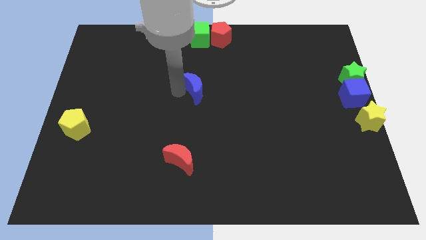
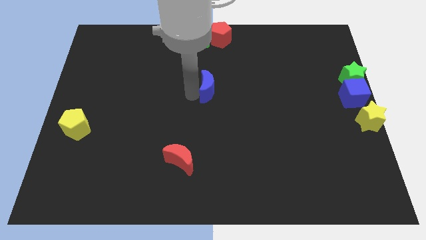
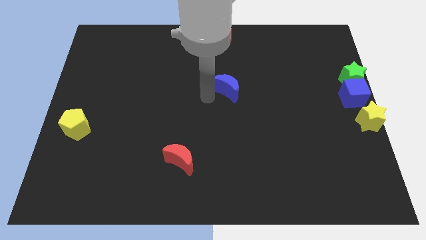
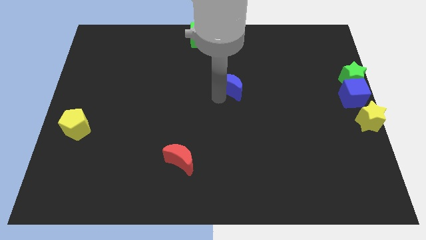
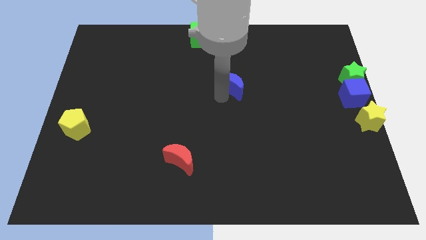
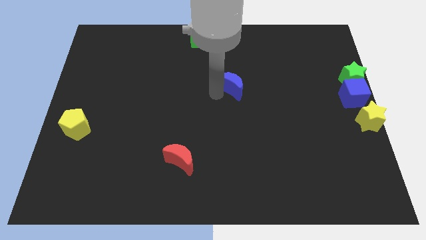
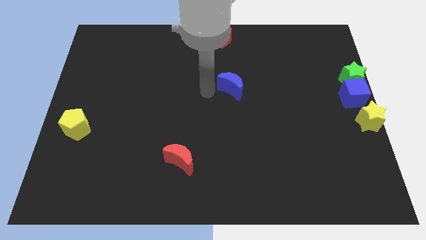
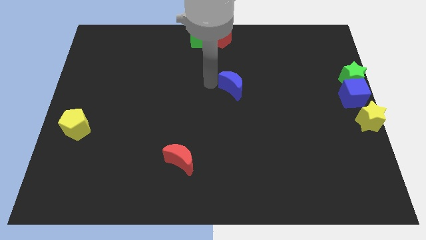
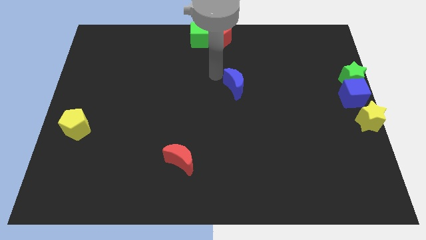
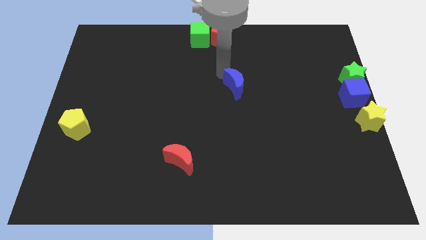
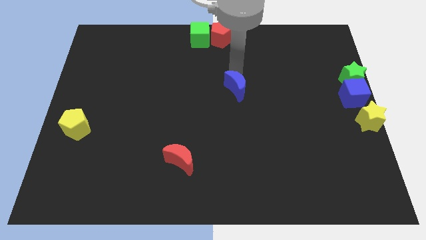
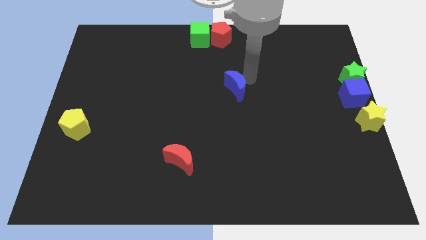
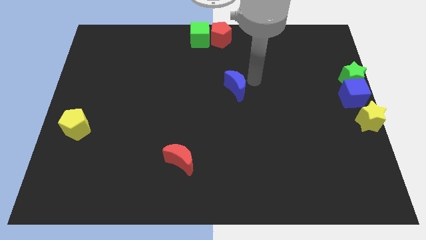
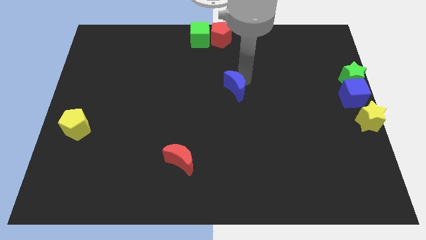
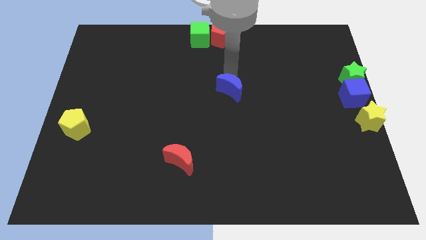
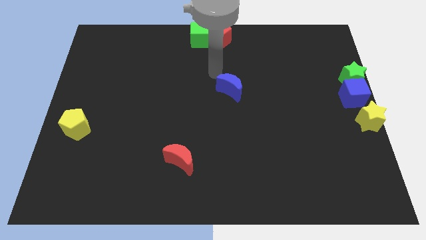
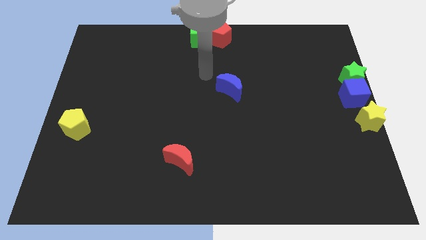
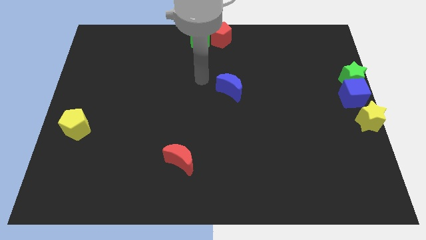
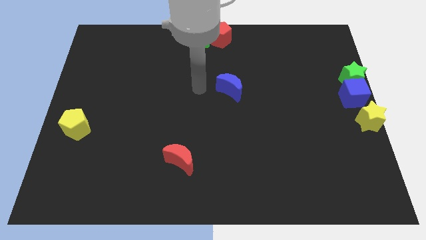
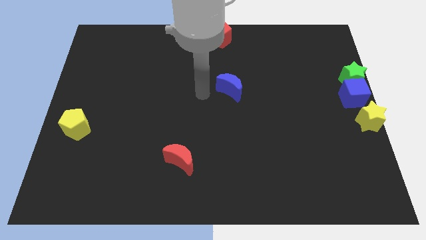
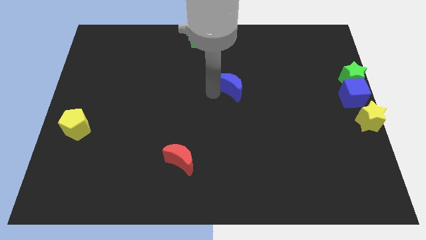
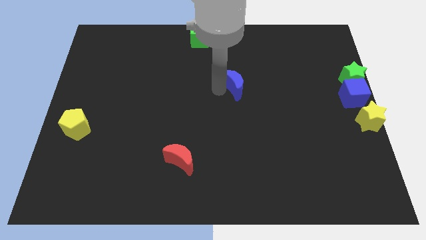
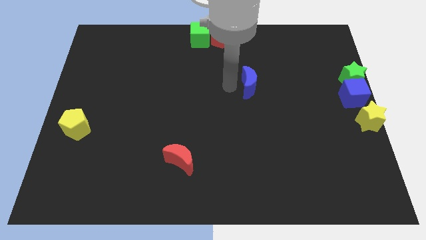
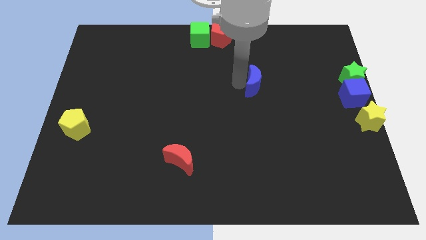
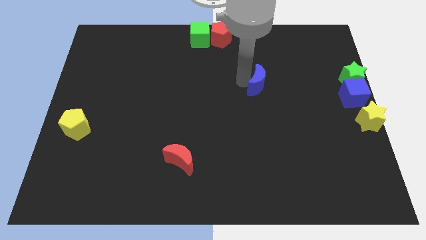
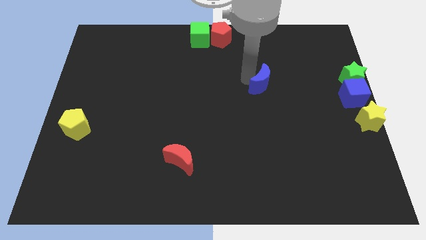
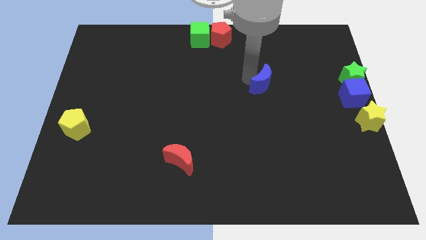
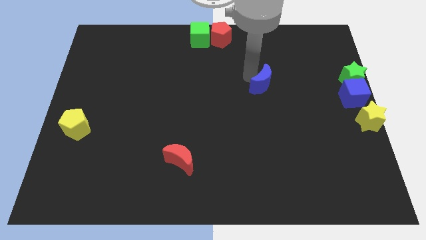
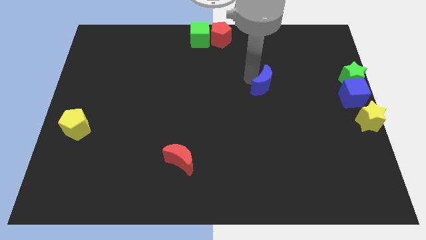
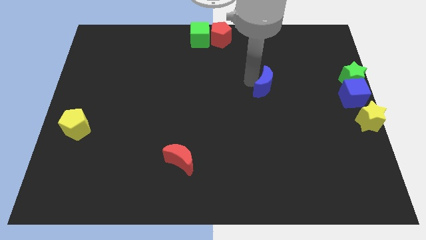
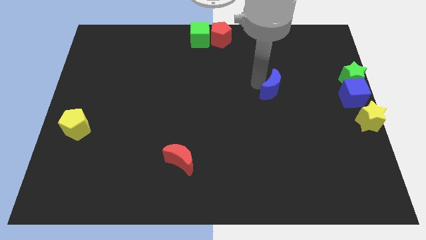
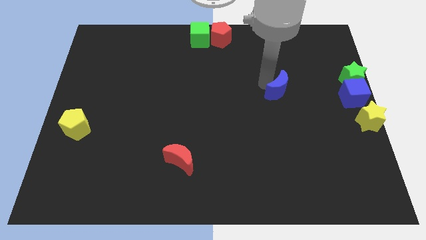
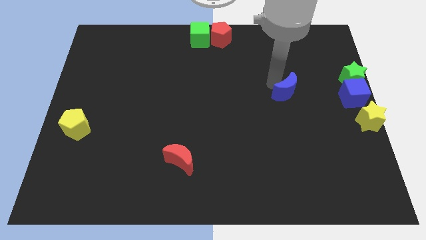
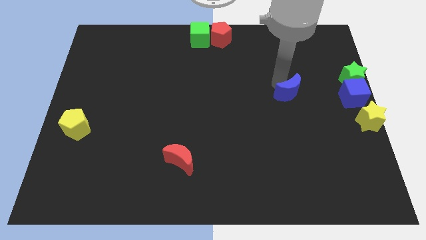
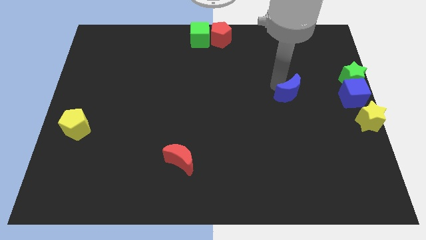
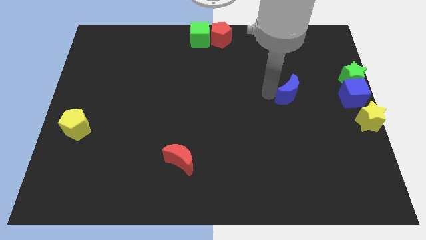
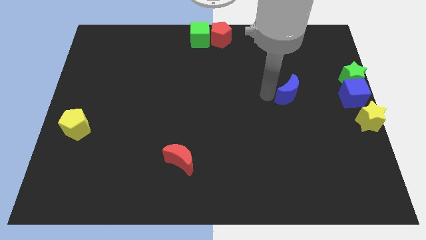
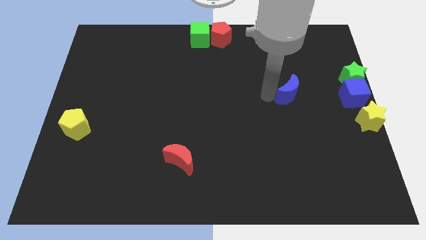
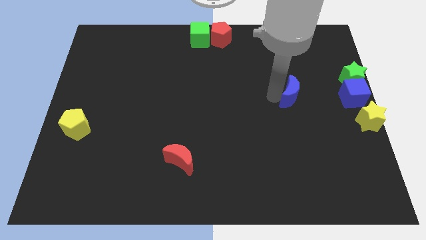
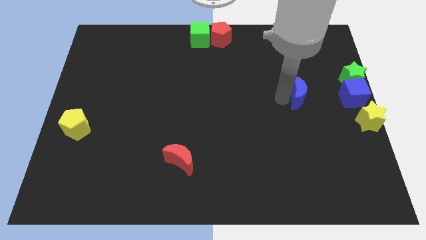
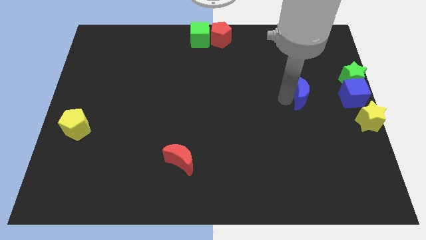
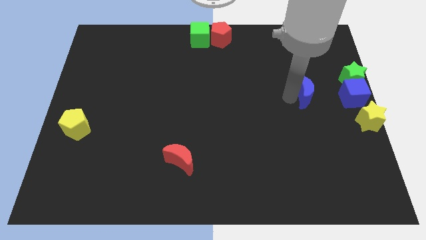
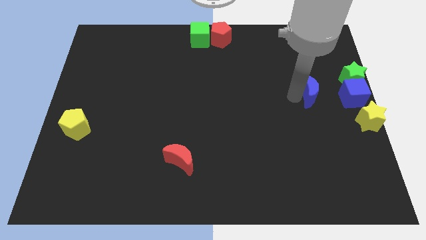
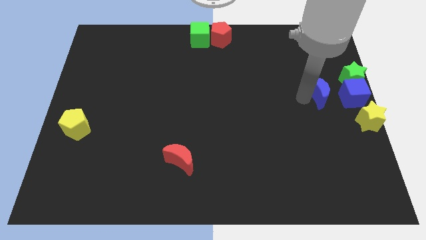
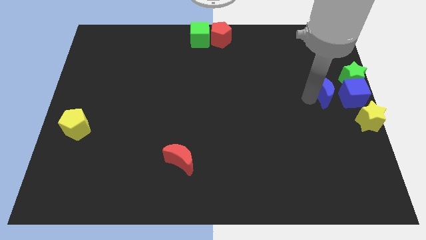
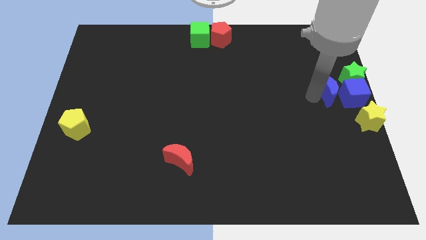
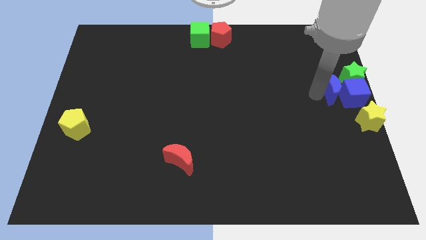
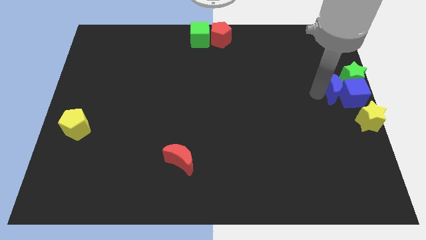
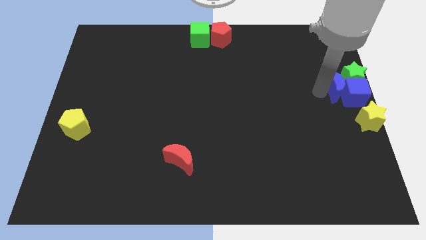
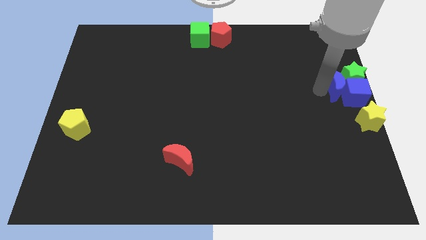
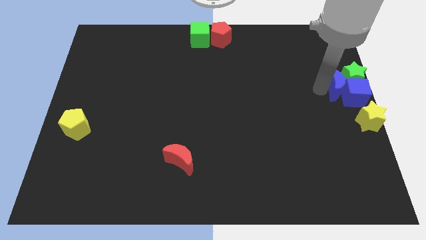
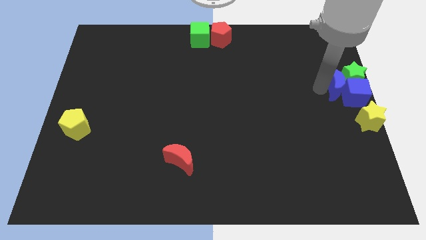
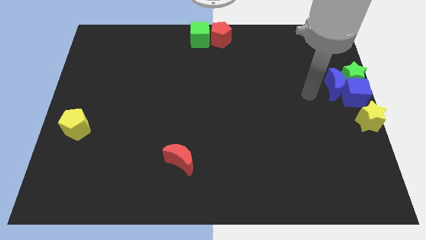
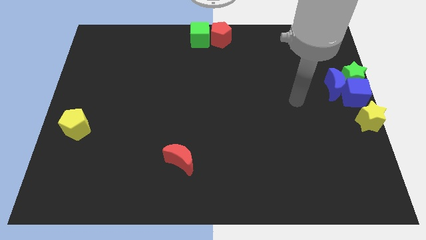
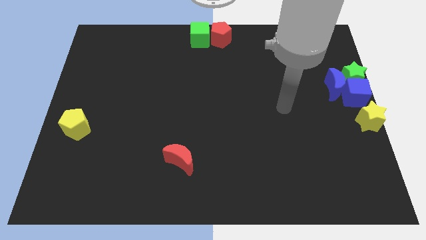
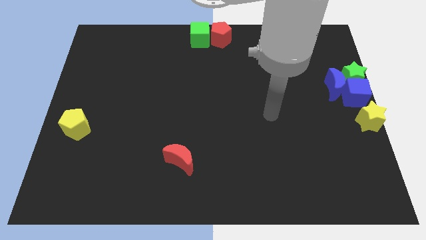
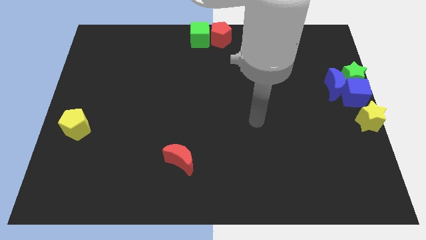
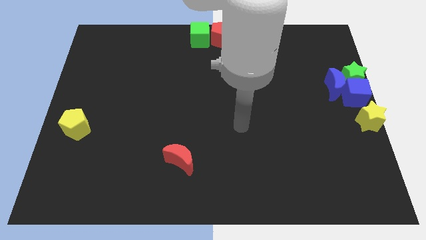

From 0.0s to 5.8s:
move the blue crescent into the green star and the blue cube

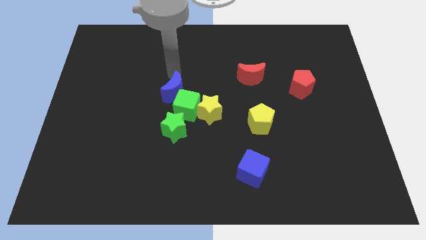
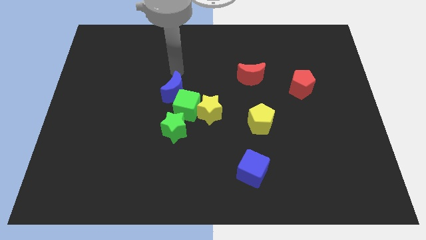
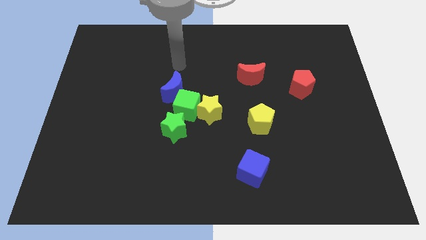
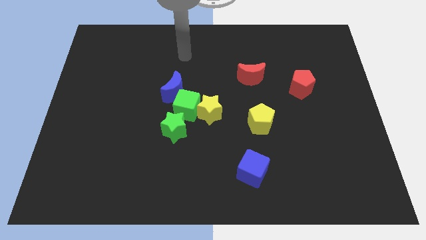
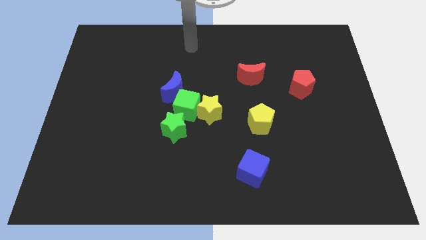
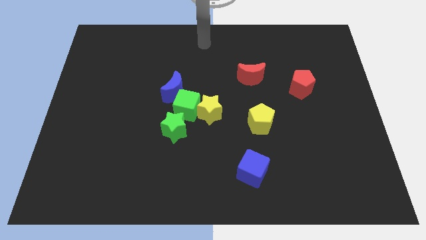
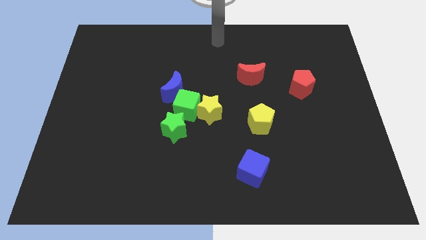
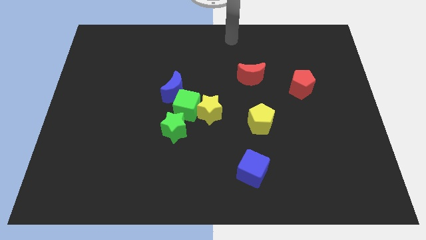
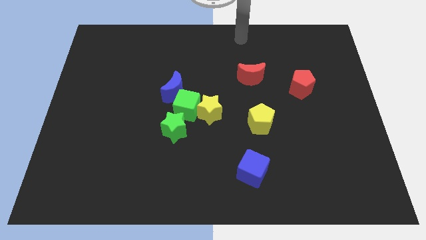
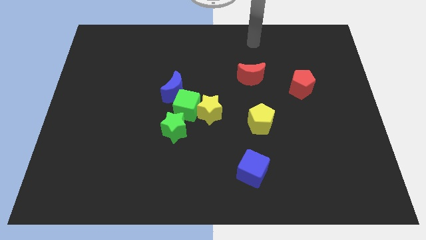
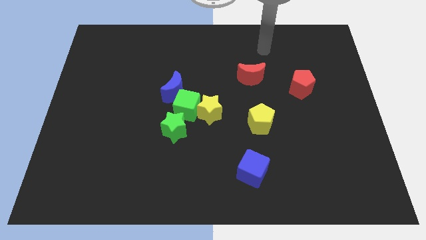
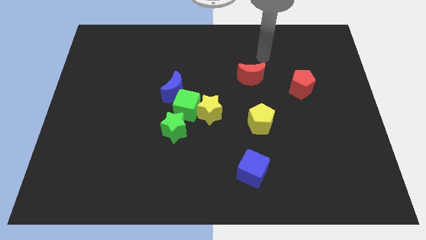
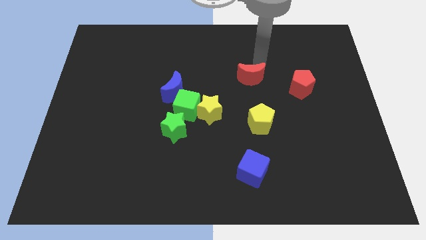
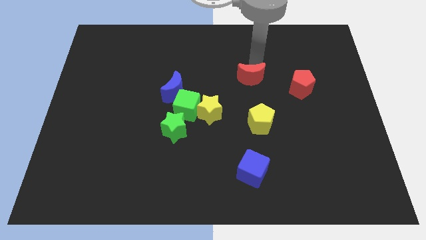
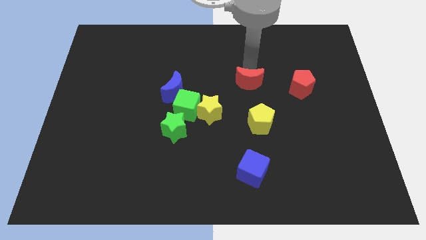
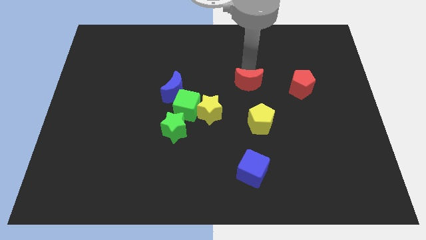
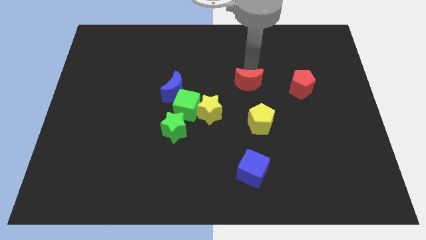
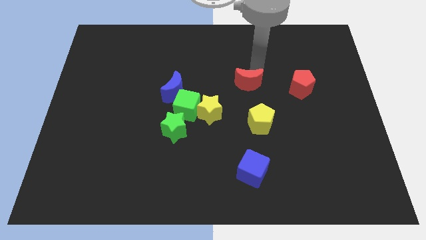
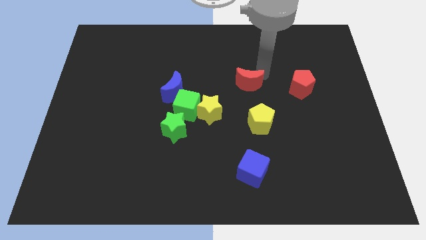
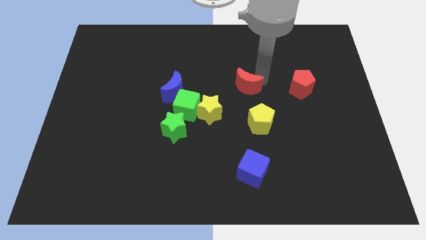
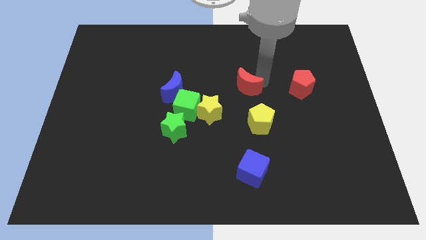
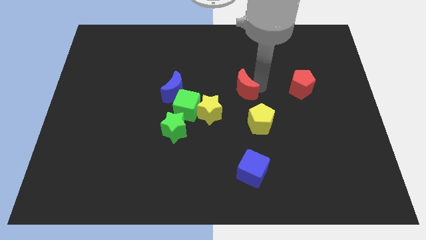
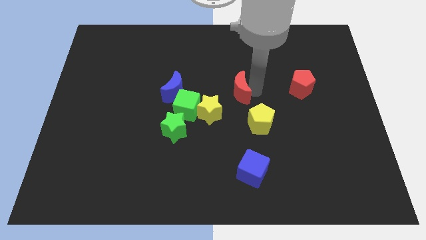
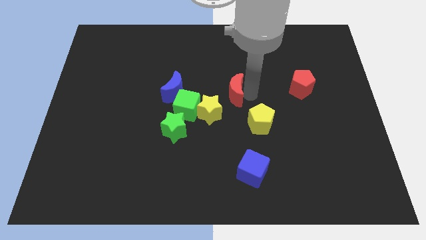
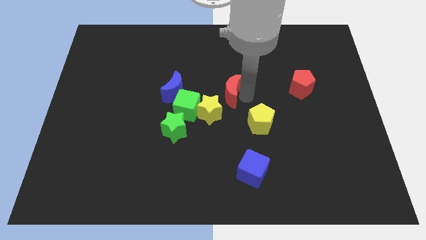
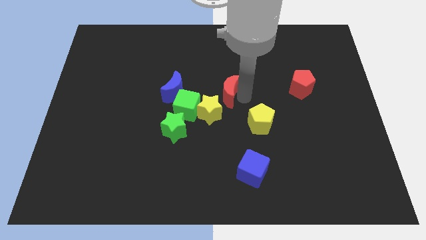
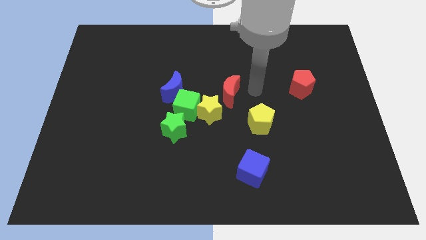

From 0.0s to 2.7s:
drag the red crescent close to the yellow star

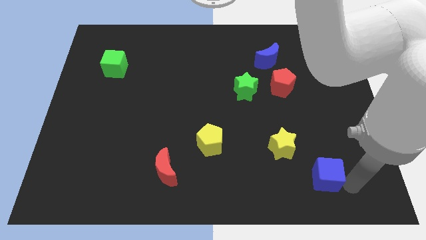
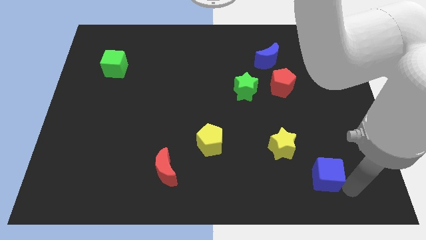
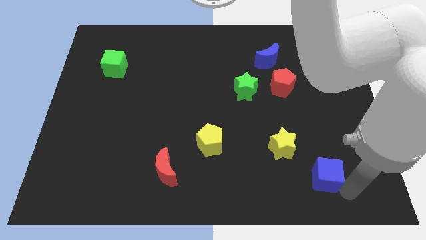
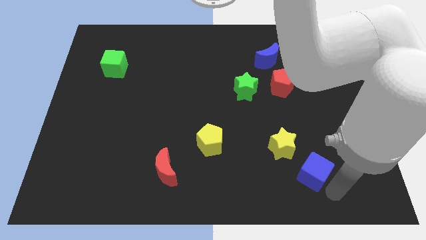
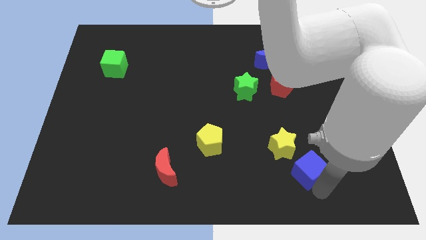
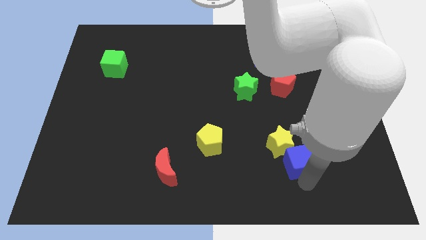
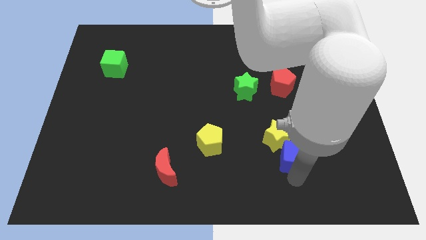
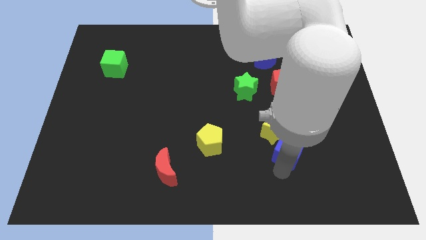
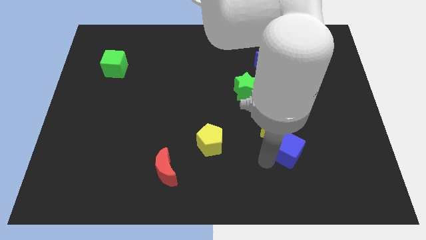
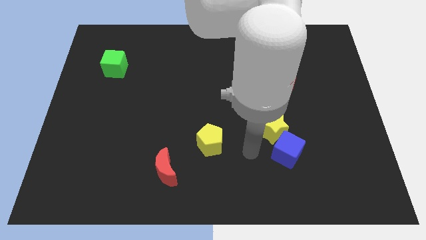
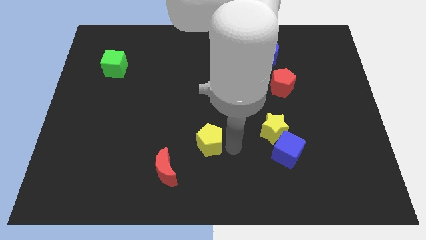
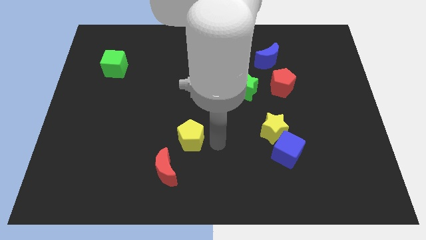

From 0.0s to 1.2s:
push the blue cube into the yellow star
